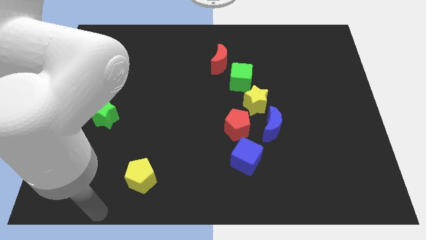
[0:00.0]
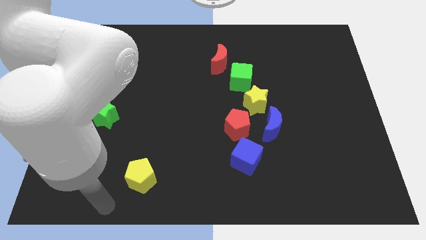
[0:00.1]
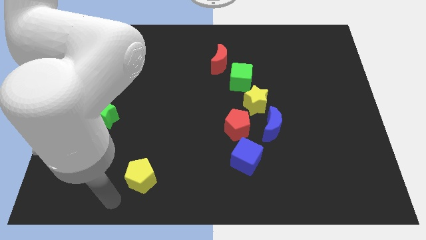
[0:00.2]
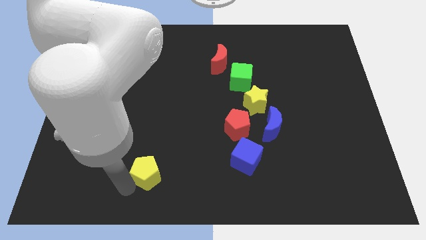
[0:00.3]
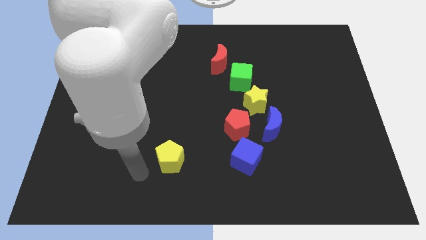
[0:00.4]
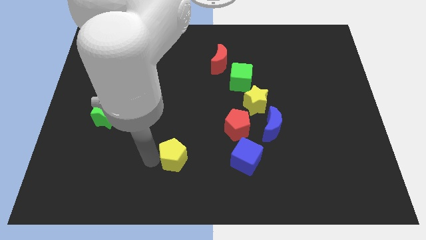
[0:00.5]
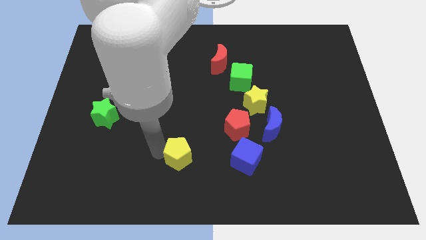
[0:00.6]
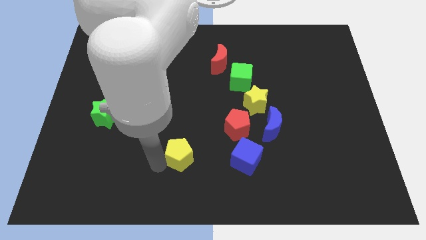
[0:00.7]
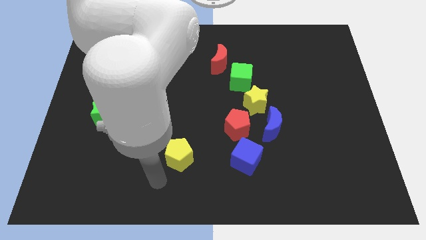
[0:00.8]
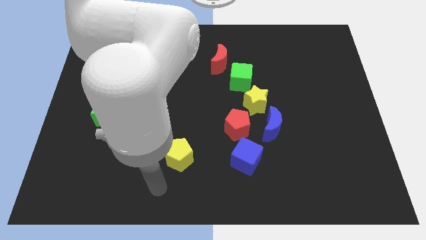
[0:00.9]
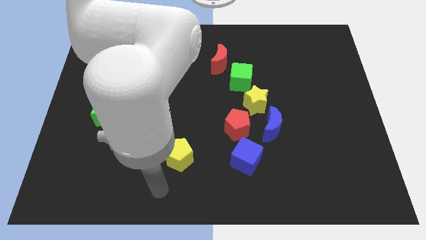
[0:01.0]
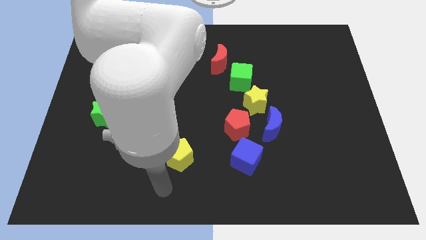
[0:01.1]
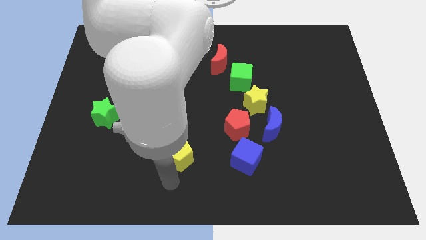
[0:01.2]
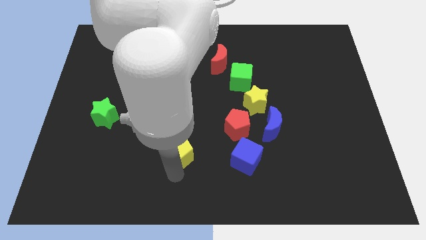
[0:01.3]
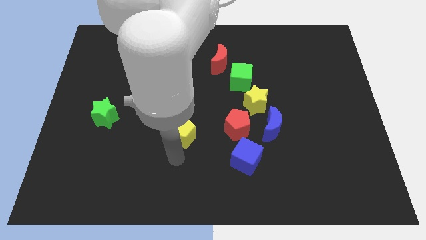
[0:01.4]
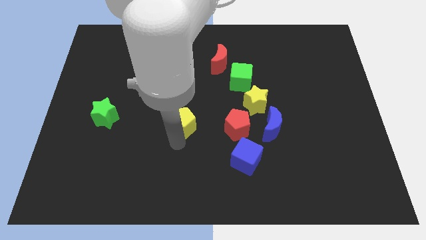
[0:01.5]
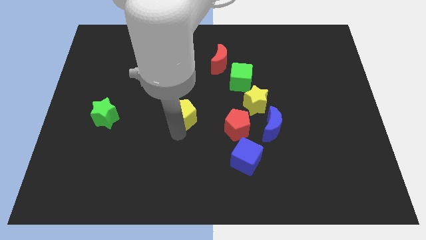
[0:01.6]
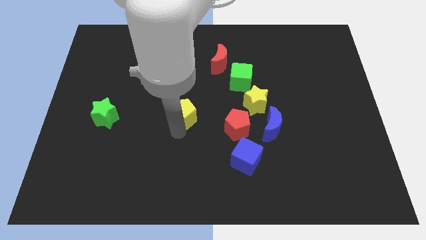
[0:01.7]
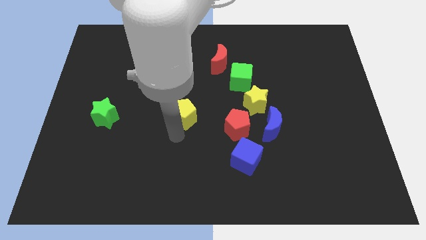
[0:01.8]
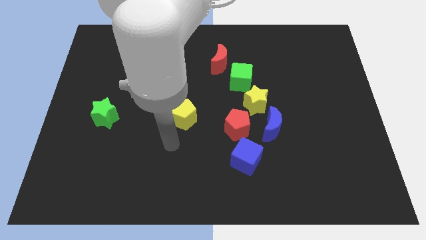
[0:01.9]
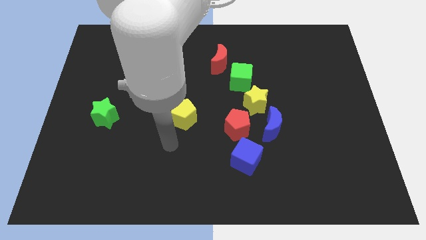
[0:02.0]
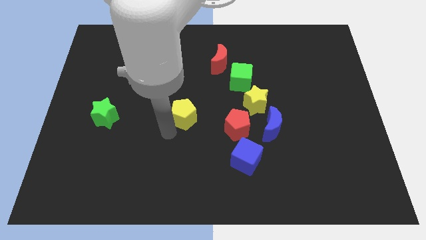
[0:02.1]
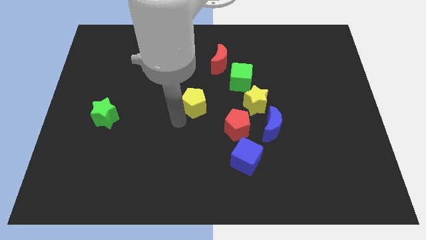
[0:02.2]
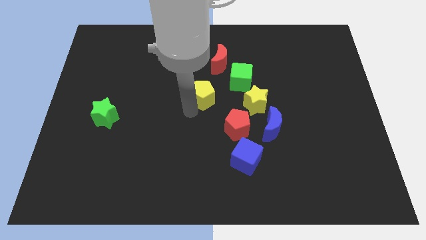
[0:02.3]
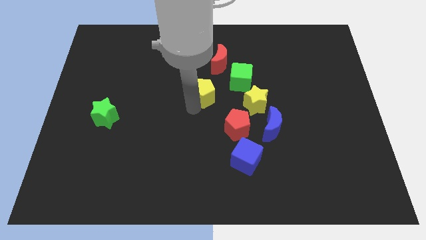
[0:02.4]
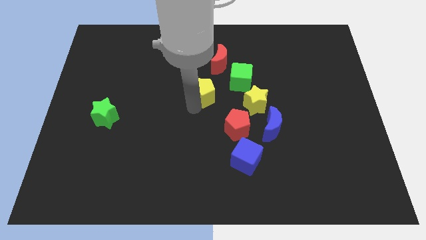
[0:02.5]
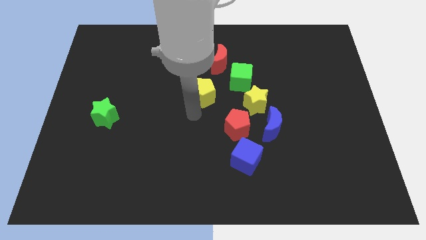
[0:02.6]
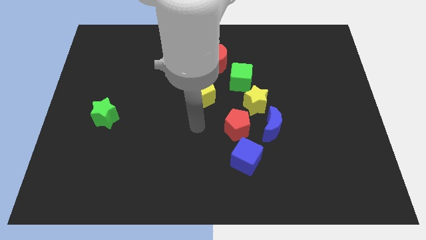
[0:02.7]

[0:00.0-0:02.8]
place the yellow pentagon under the red crescent

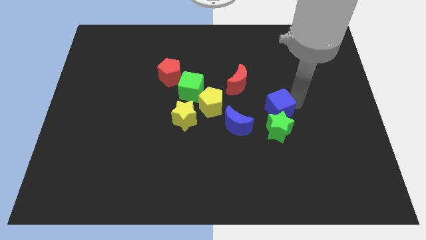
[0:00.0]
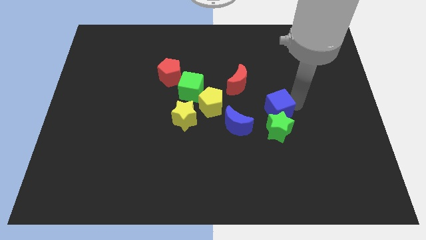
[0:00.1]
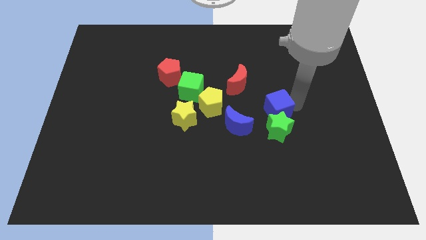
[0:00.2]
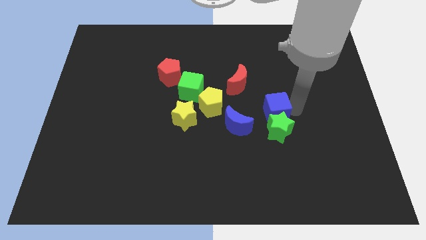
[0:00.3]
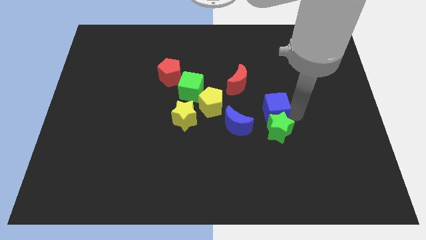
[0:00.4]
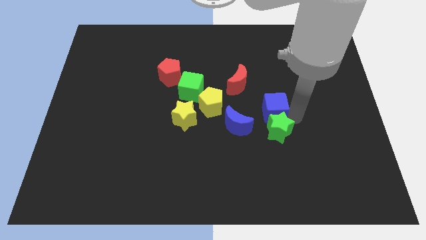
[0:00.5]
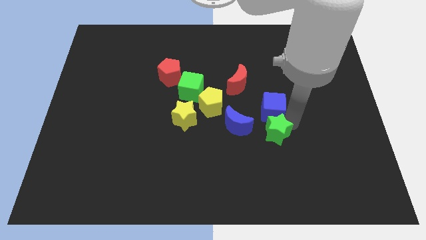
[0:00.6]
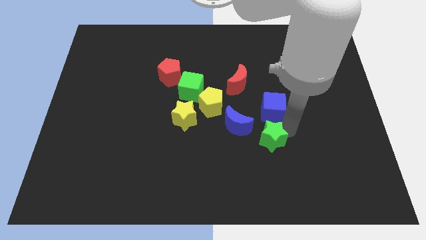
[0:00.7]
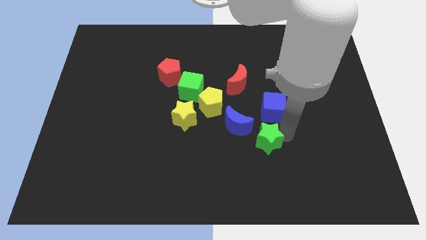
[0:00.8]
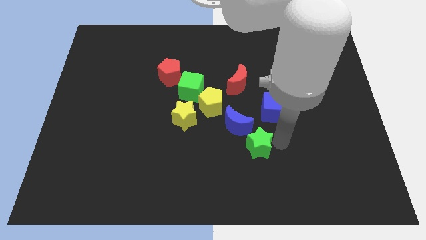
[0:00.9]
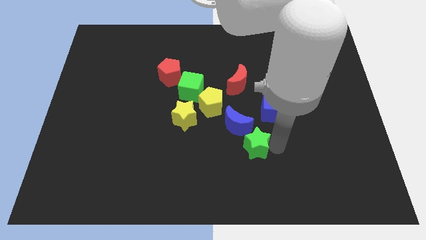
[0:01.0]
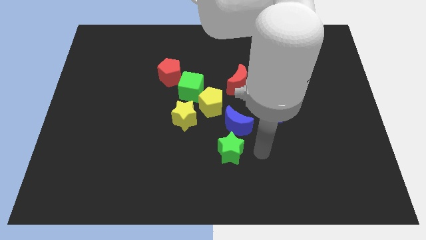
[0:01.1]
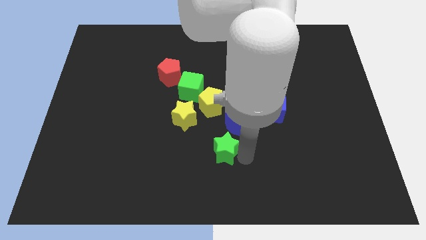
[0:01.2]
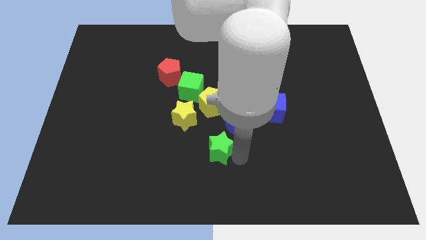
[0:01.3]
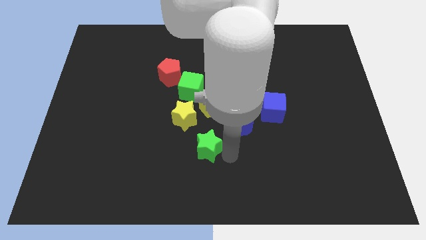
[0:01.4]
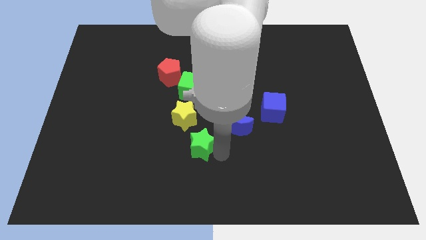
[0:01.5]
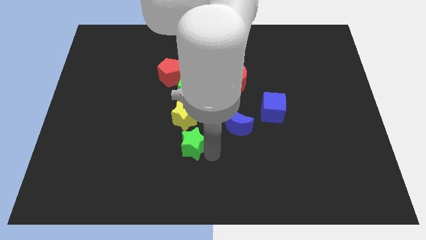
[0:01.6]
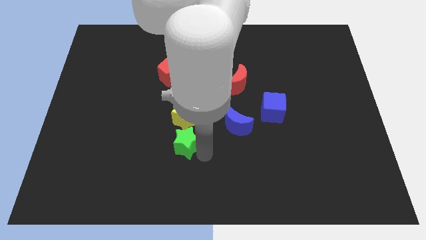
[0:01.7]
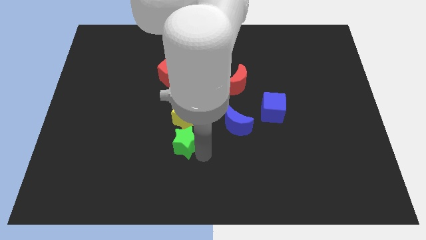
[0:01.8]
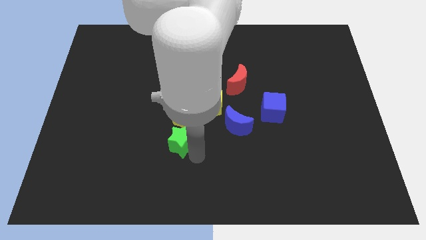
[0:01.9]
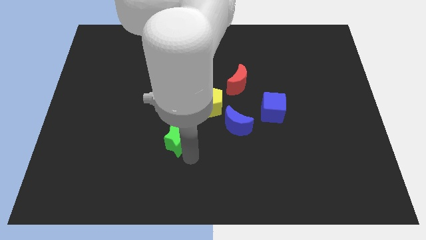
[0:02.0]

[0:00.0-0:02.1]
place green star to the bottom of yellow star

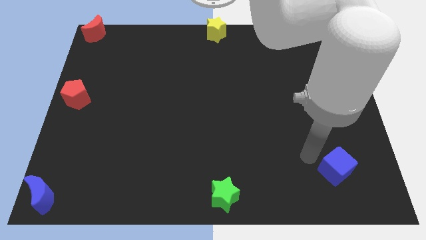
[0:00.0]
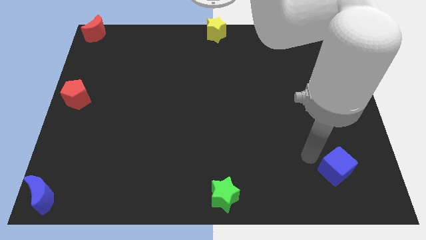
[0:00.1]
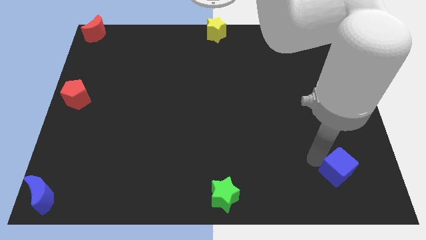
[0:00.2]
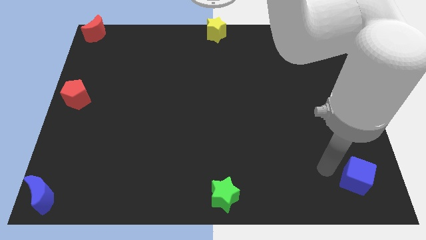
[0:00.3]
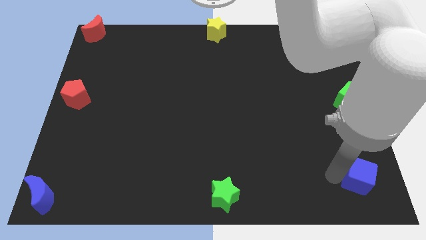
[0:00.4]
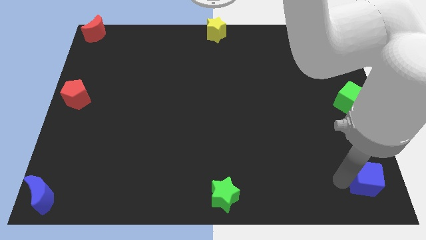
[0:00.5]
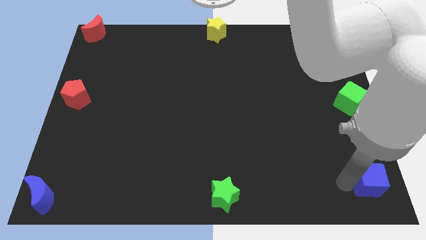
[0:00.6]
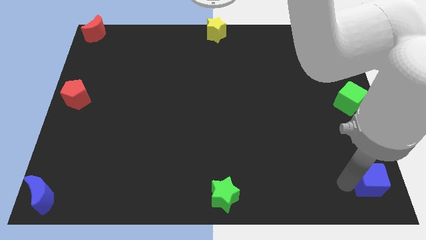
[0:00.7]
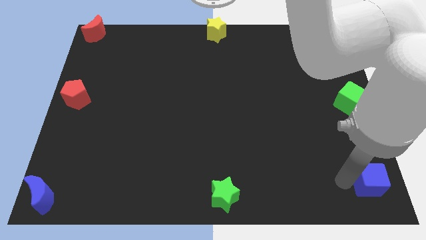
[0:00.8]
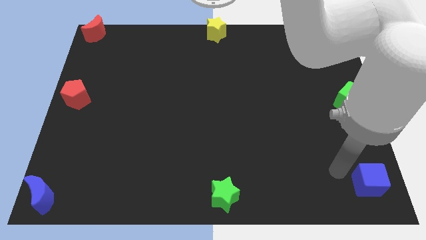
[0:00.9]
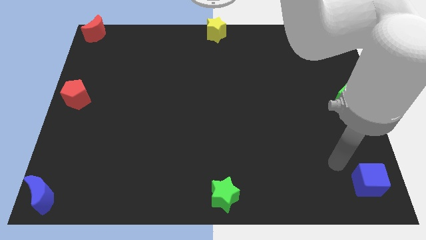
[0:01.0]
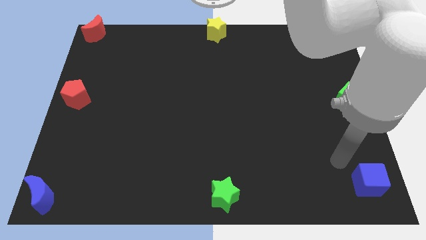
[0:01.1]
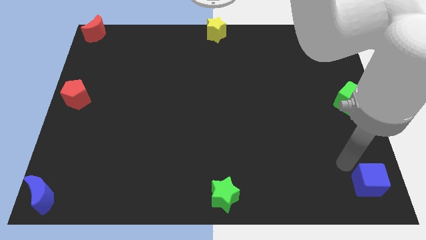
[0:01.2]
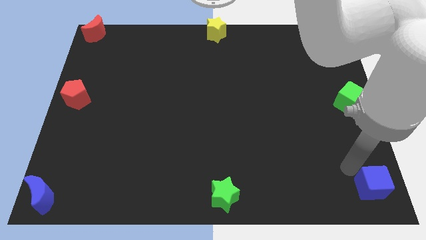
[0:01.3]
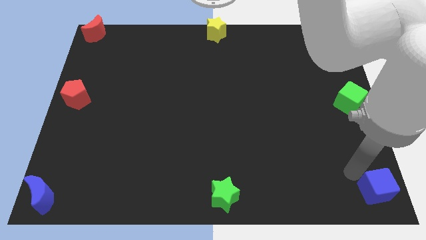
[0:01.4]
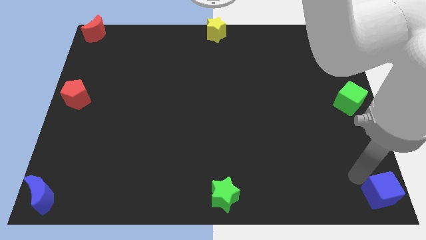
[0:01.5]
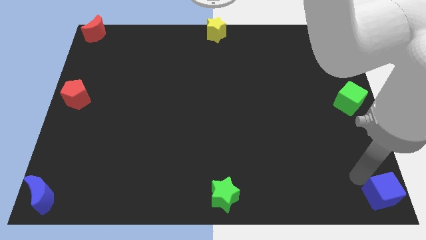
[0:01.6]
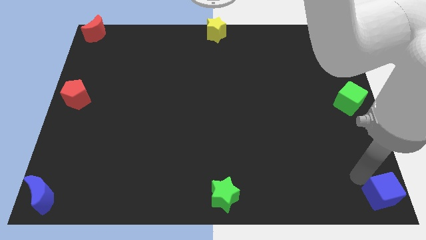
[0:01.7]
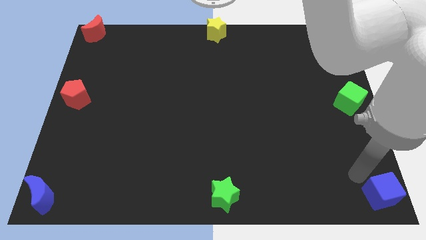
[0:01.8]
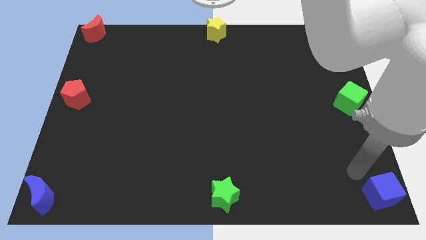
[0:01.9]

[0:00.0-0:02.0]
move the blue cube to the bottom right of the board

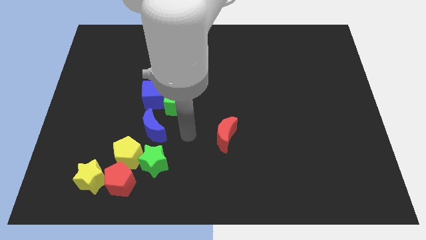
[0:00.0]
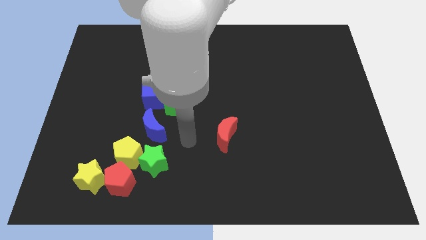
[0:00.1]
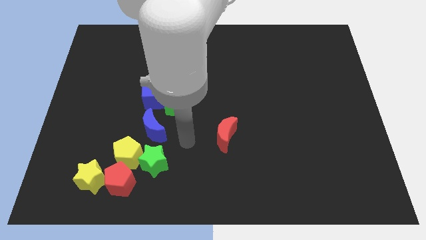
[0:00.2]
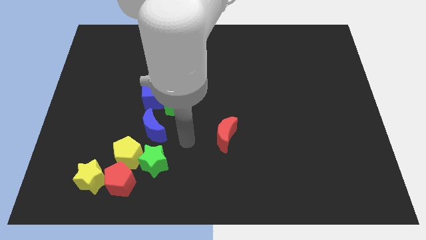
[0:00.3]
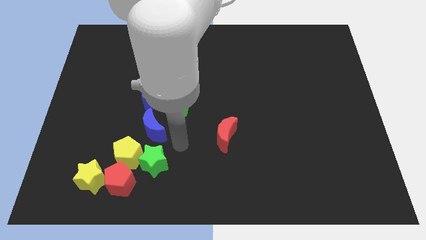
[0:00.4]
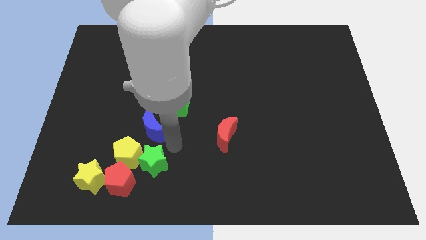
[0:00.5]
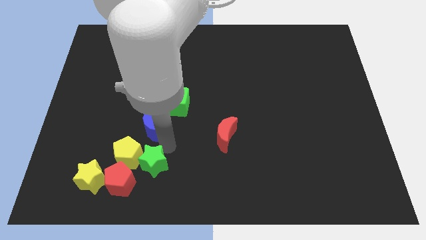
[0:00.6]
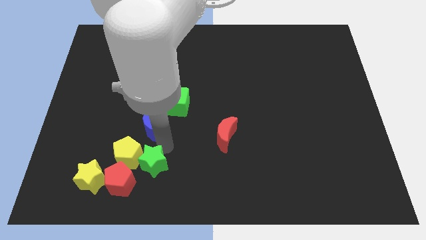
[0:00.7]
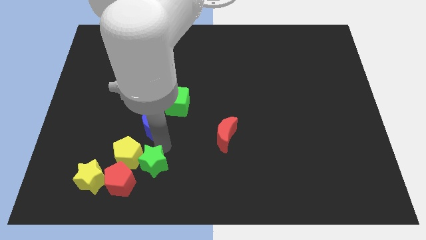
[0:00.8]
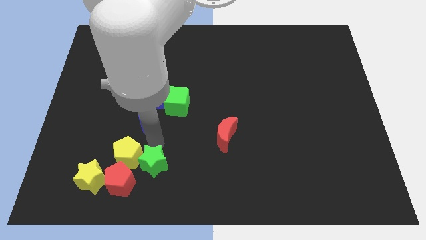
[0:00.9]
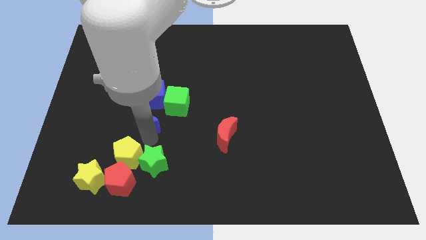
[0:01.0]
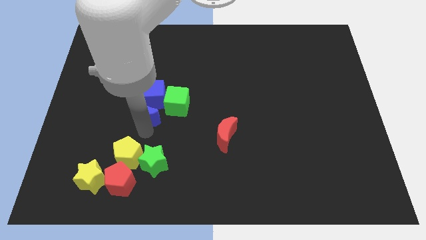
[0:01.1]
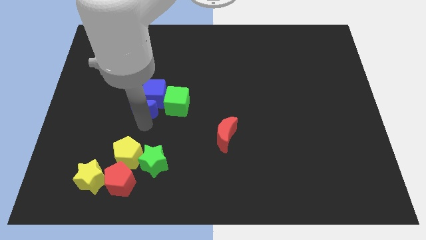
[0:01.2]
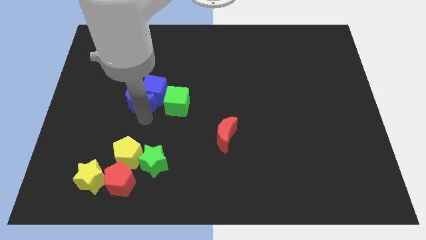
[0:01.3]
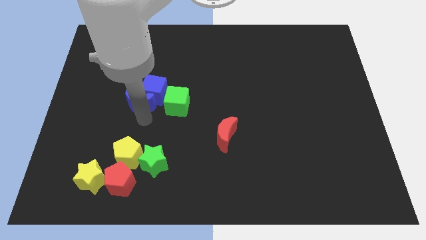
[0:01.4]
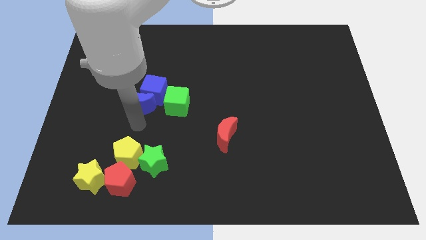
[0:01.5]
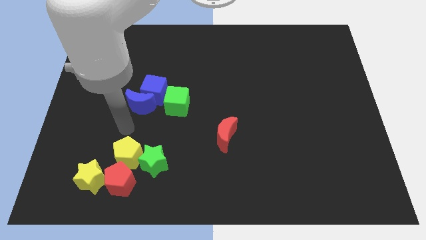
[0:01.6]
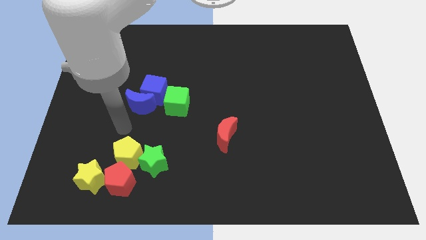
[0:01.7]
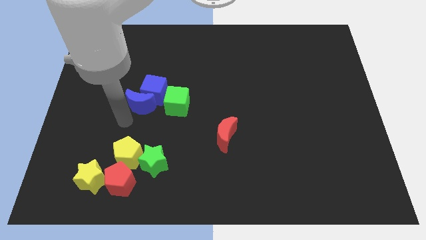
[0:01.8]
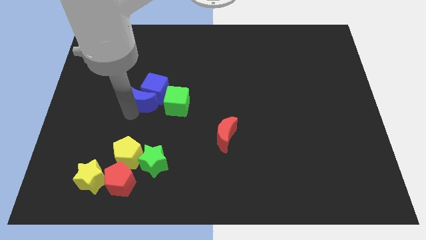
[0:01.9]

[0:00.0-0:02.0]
push the blue crescent into the blue cube

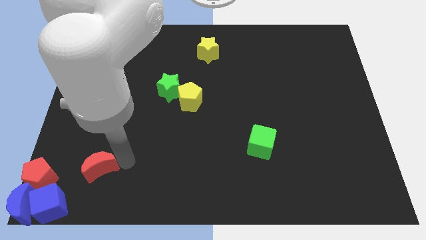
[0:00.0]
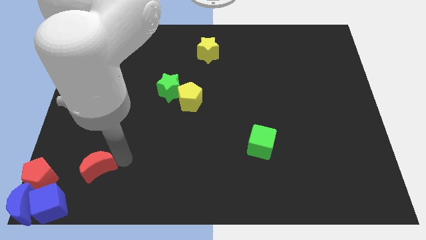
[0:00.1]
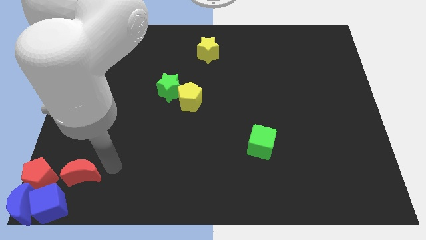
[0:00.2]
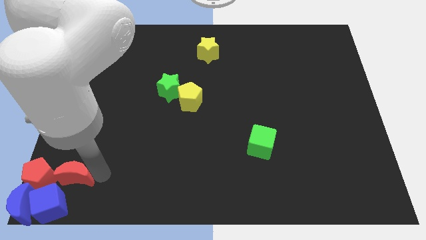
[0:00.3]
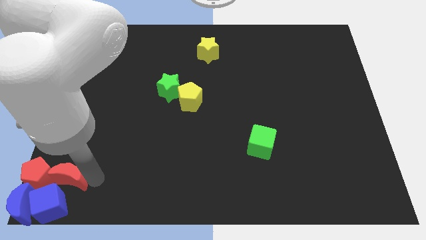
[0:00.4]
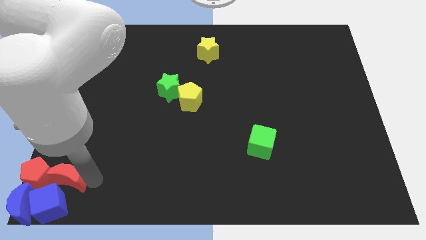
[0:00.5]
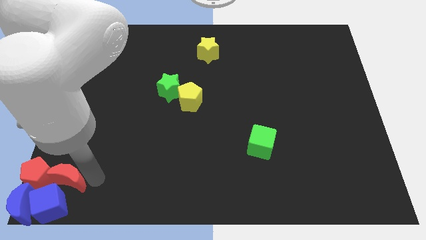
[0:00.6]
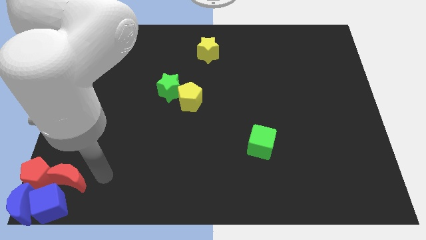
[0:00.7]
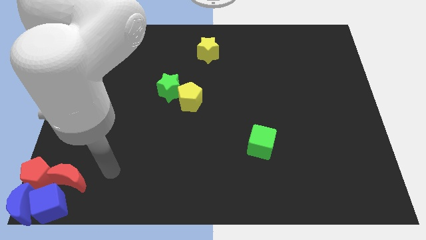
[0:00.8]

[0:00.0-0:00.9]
place the red crescent right to the red pentagon
